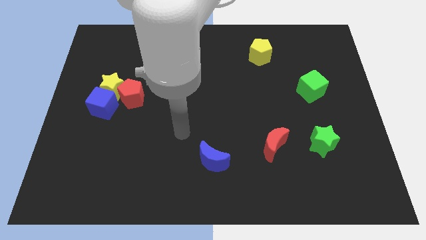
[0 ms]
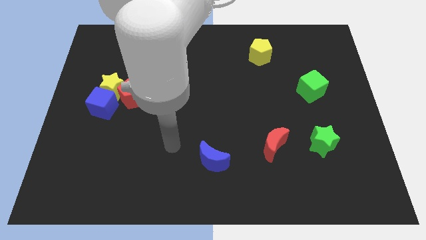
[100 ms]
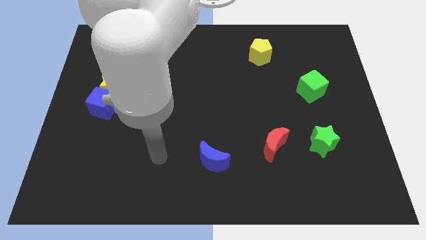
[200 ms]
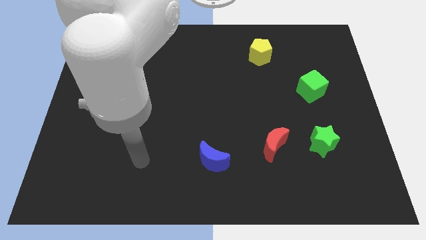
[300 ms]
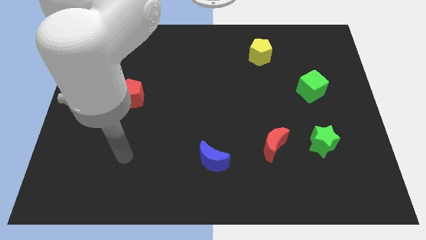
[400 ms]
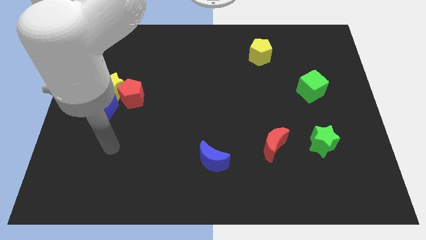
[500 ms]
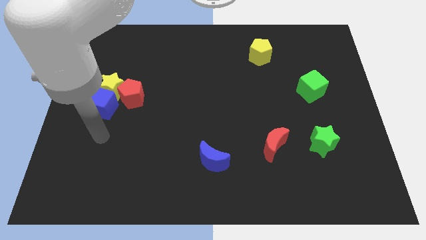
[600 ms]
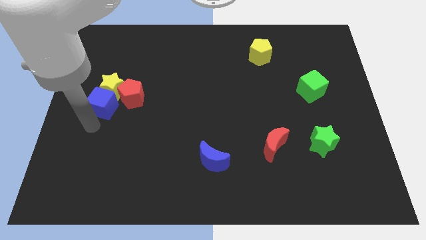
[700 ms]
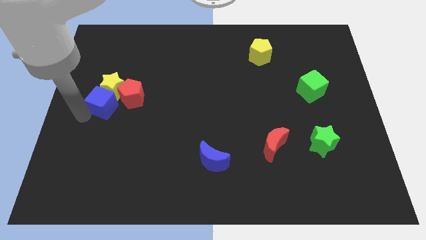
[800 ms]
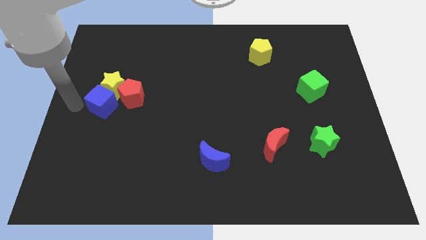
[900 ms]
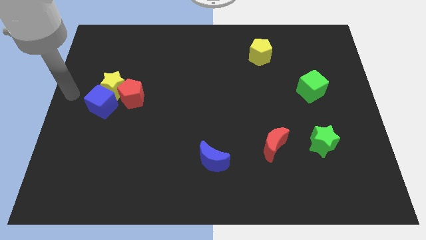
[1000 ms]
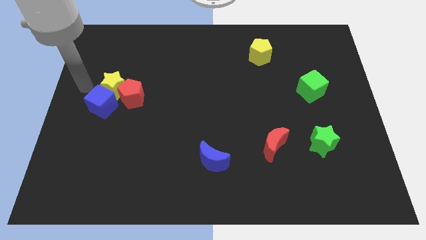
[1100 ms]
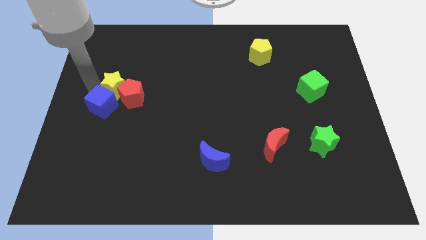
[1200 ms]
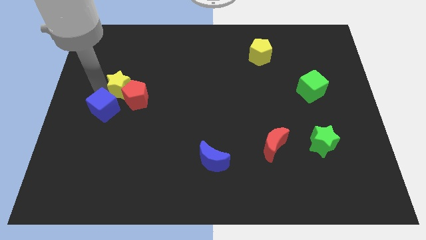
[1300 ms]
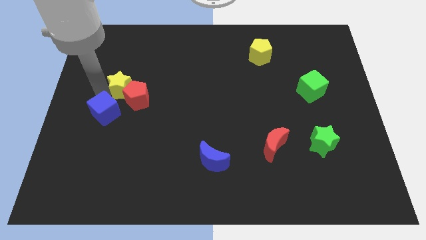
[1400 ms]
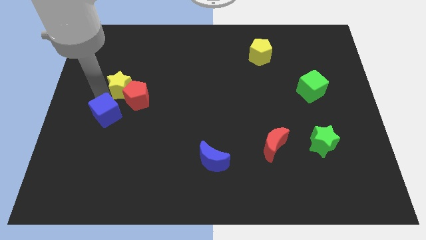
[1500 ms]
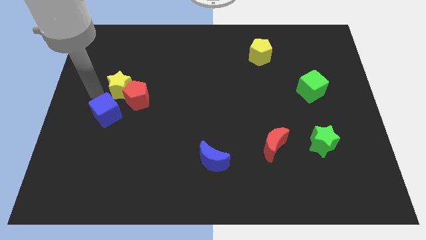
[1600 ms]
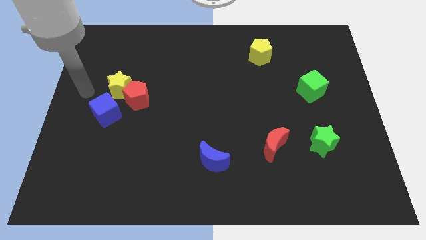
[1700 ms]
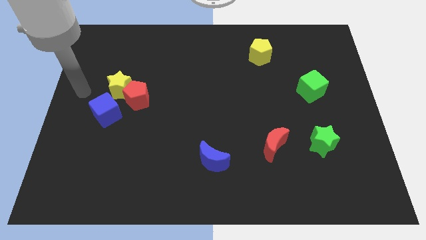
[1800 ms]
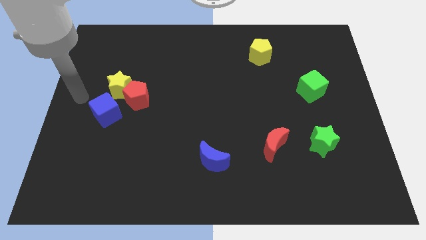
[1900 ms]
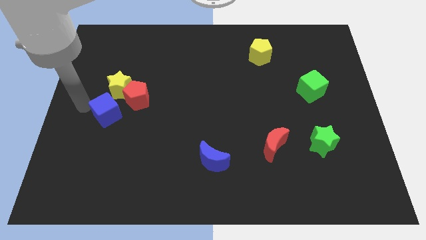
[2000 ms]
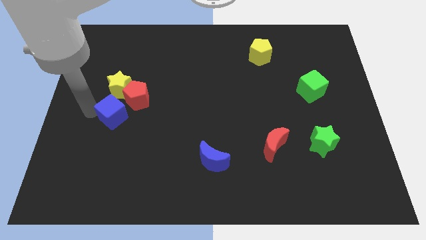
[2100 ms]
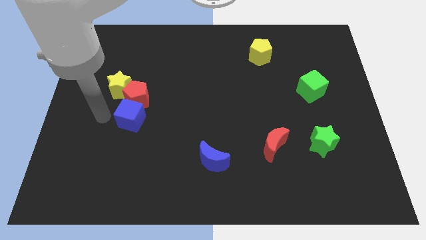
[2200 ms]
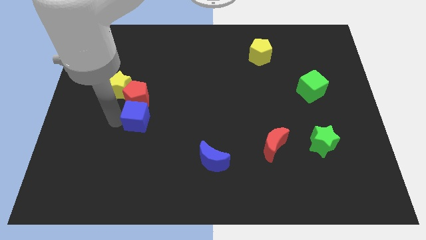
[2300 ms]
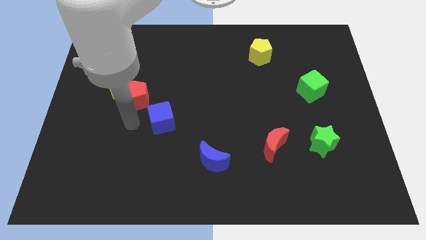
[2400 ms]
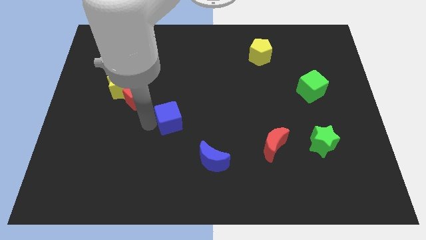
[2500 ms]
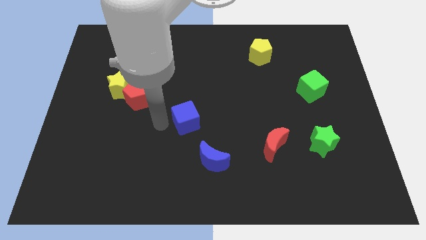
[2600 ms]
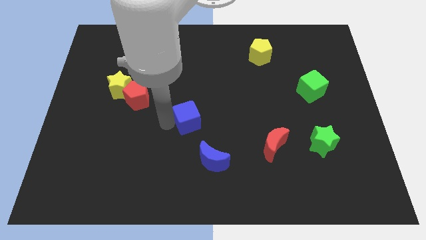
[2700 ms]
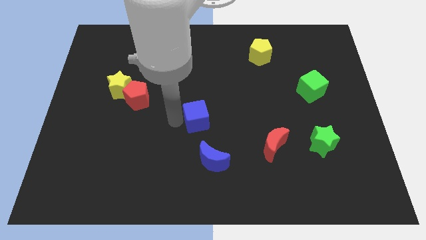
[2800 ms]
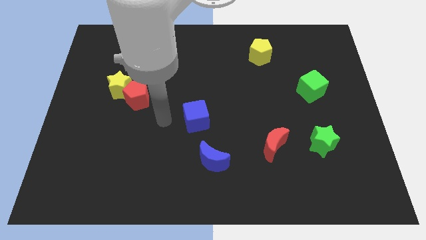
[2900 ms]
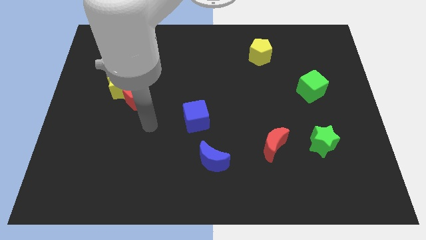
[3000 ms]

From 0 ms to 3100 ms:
slide blue cube towards center

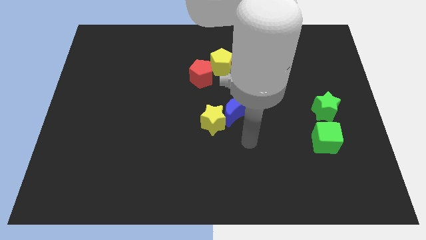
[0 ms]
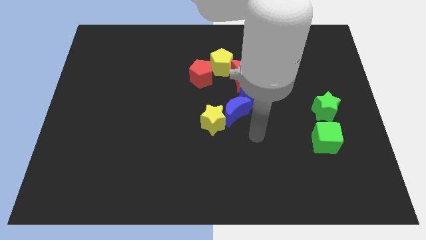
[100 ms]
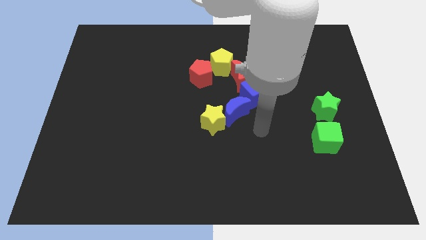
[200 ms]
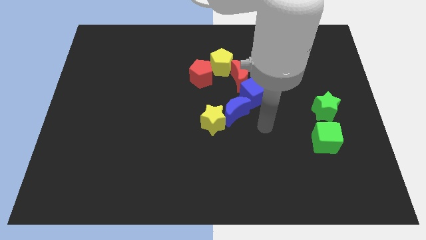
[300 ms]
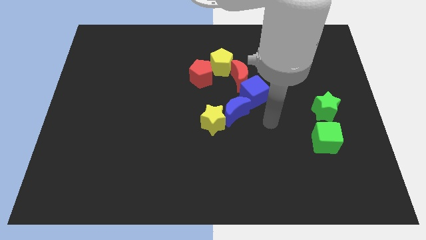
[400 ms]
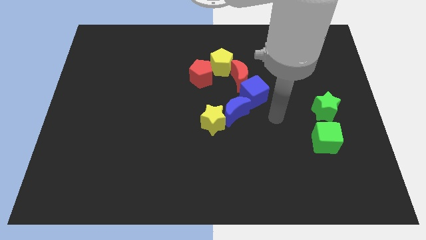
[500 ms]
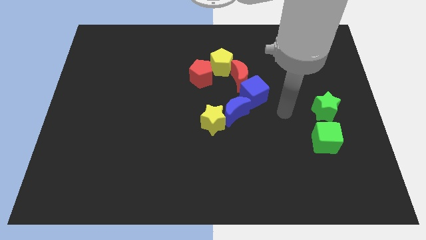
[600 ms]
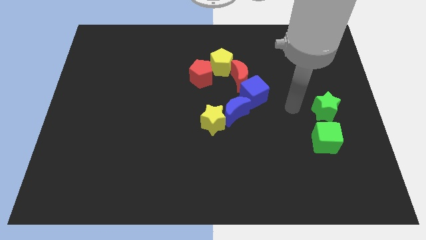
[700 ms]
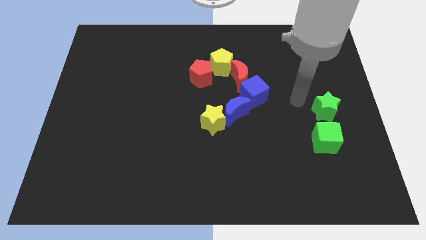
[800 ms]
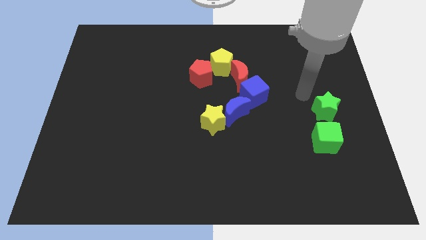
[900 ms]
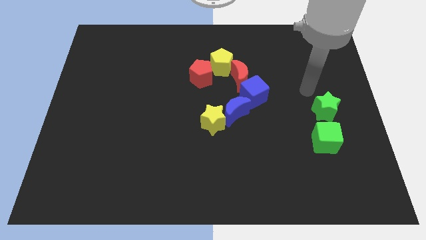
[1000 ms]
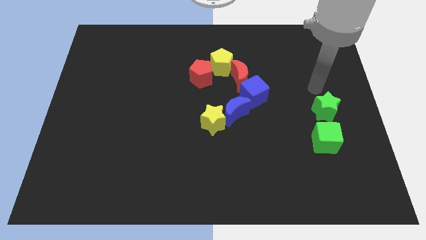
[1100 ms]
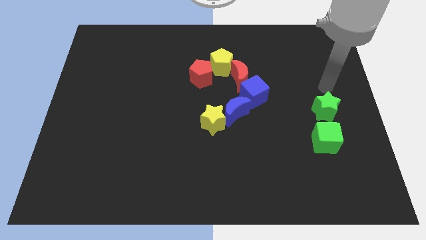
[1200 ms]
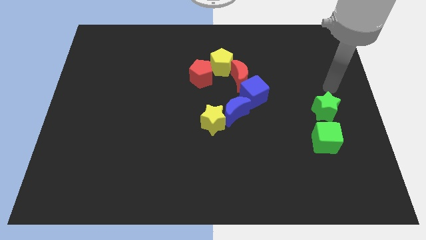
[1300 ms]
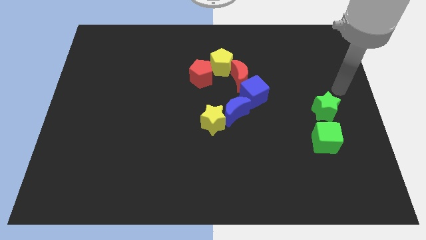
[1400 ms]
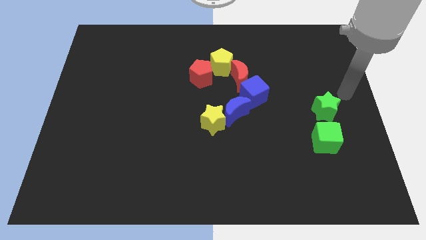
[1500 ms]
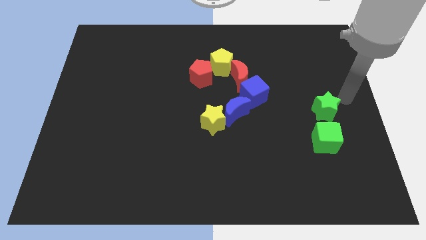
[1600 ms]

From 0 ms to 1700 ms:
move your arm towards the green star

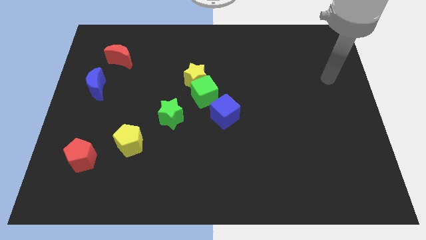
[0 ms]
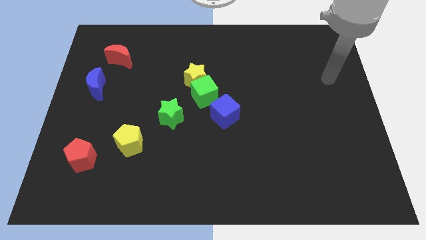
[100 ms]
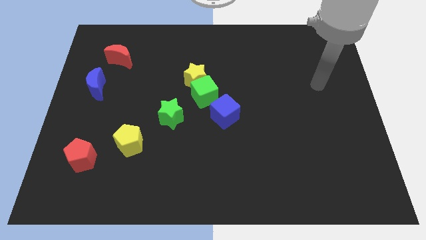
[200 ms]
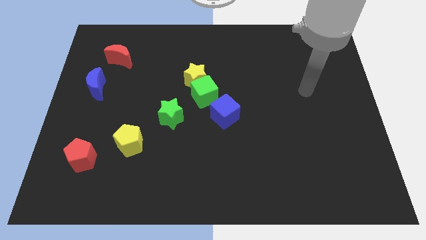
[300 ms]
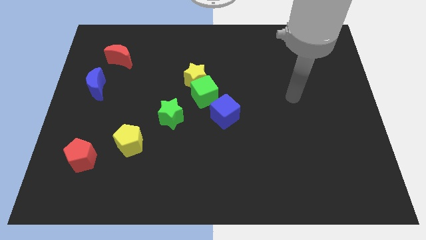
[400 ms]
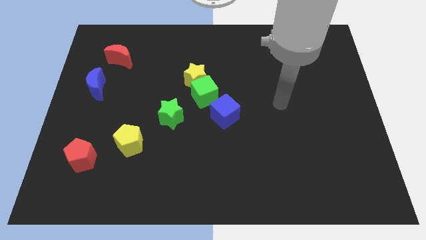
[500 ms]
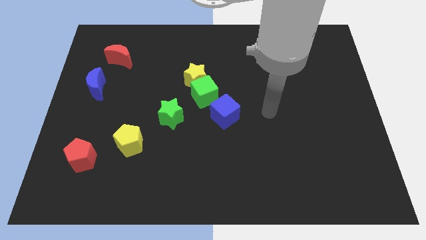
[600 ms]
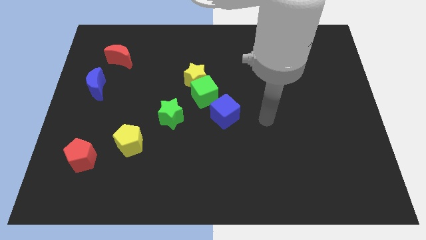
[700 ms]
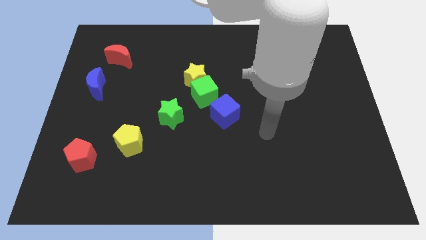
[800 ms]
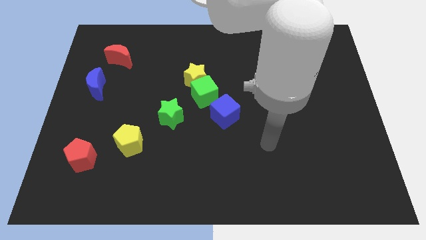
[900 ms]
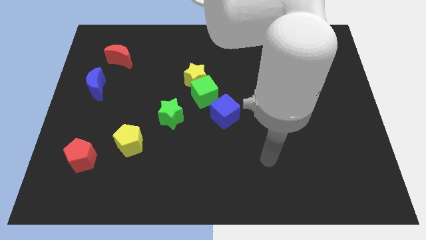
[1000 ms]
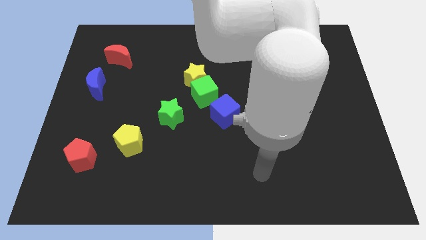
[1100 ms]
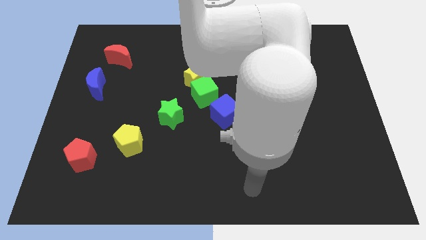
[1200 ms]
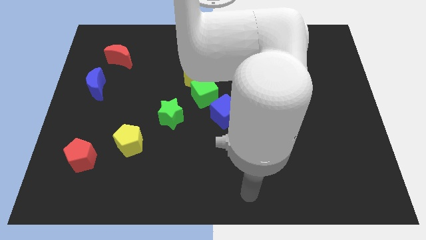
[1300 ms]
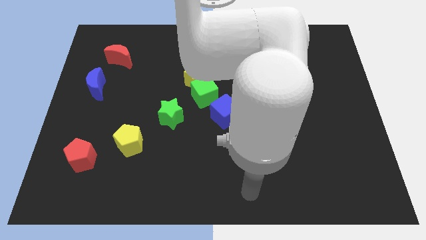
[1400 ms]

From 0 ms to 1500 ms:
place your hand at the bottom center

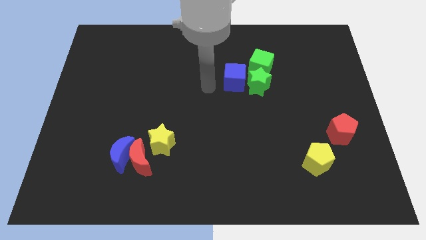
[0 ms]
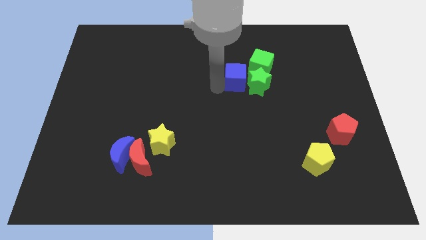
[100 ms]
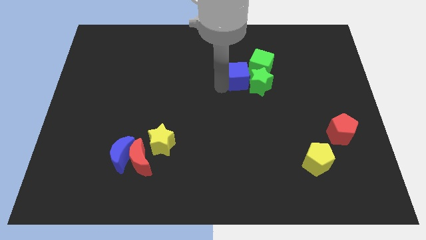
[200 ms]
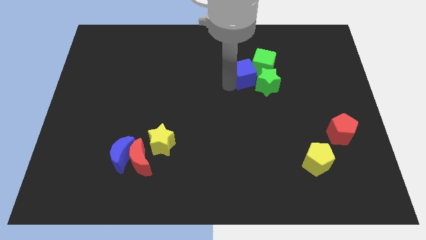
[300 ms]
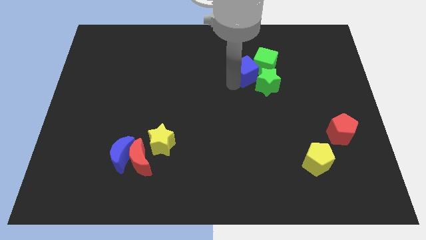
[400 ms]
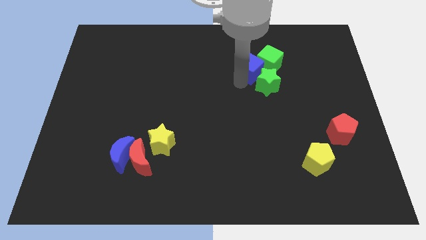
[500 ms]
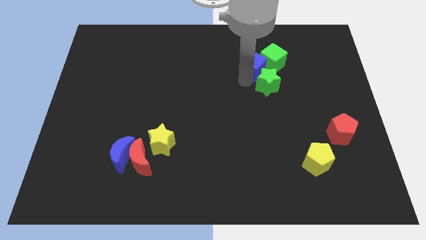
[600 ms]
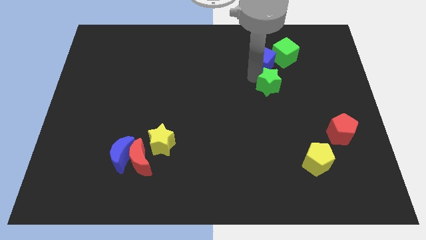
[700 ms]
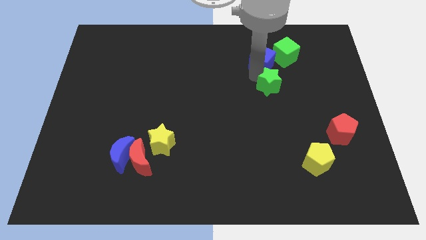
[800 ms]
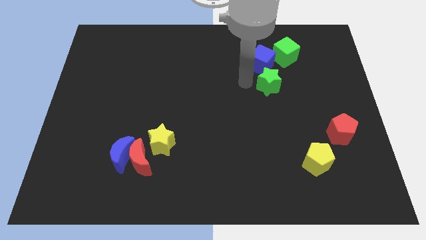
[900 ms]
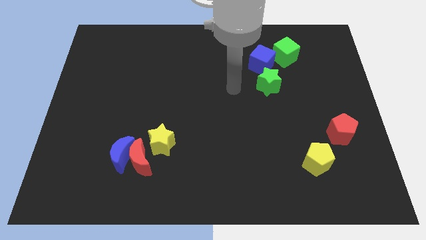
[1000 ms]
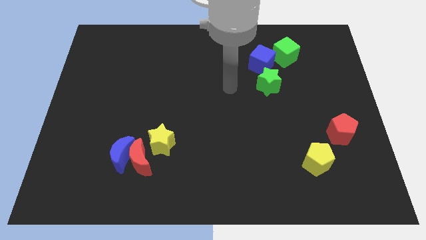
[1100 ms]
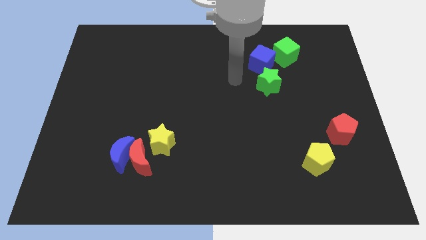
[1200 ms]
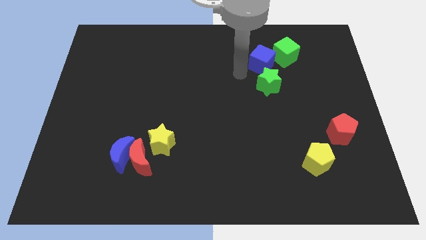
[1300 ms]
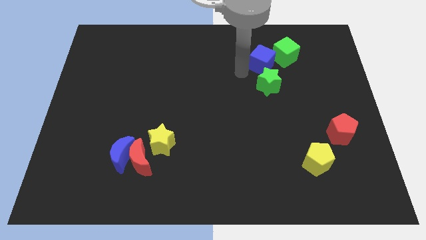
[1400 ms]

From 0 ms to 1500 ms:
push the blue and green cube along green star towards the top right of the board

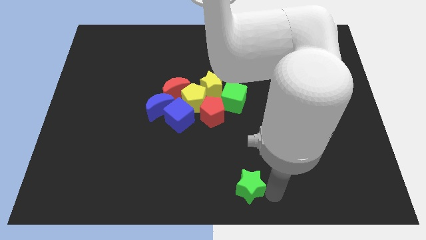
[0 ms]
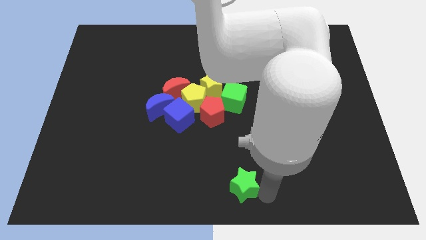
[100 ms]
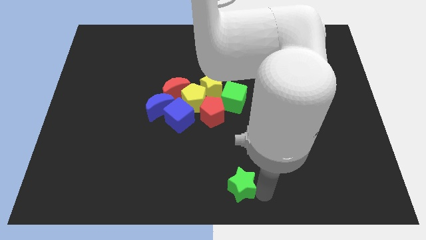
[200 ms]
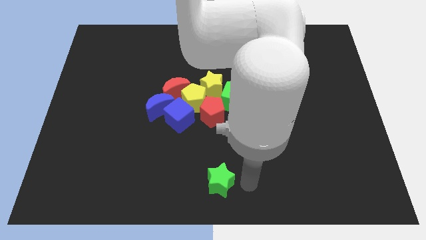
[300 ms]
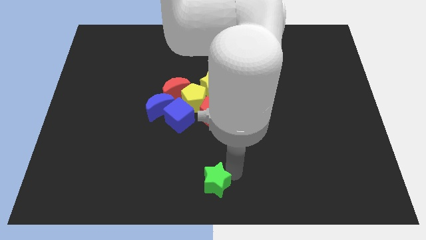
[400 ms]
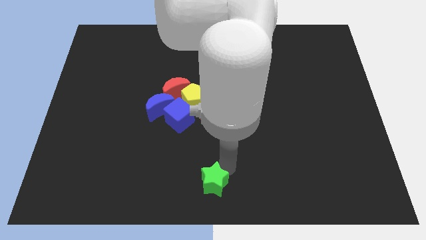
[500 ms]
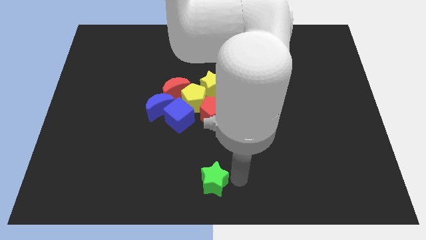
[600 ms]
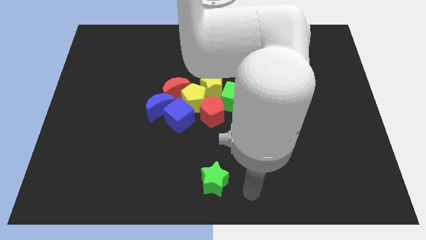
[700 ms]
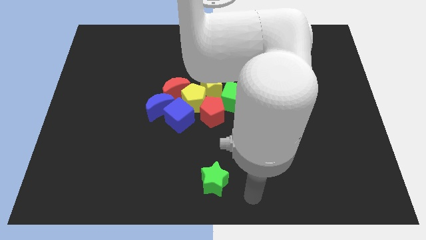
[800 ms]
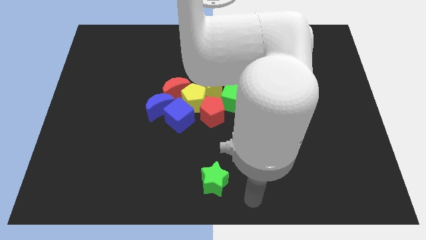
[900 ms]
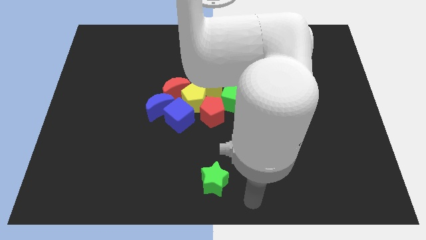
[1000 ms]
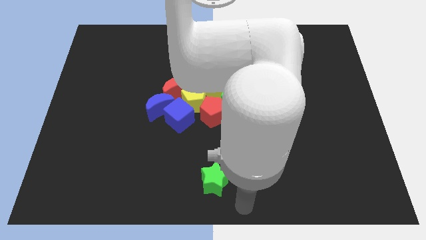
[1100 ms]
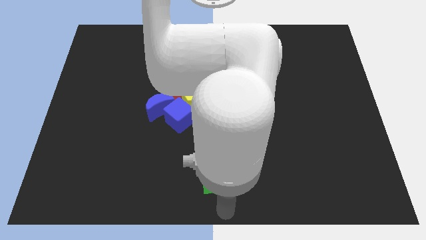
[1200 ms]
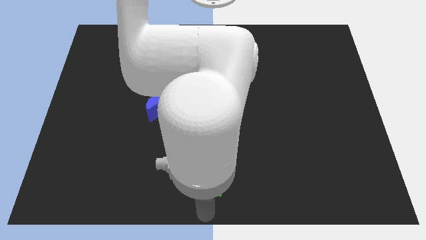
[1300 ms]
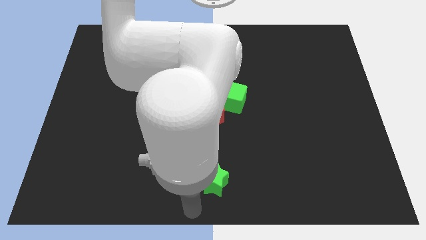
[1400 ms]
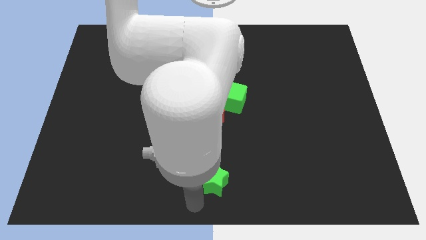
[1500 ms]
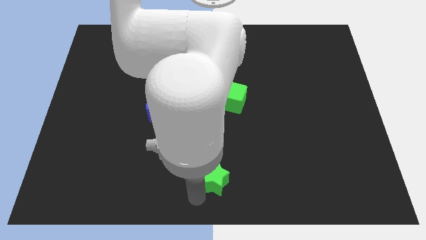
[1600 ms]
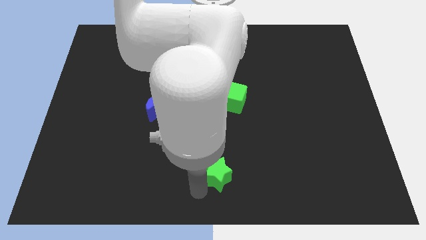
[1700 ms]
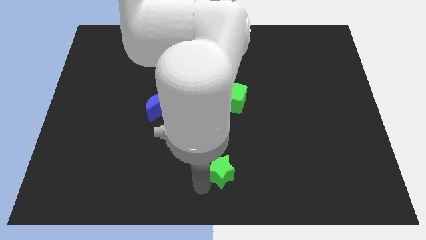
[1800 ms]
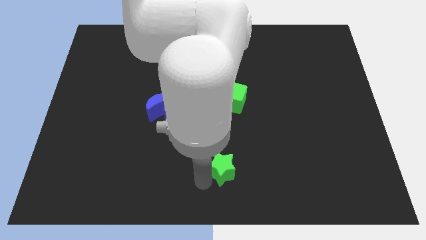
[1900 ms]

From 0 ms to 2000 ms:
push the green star towards the center of the board
